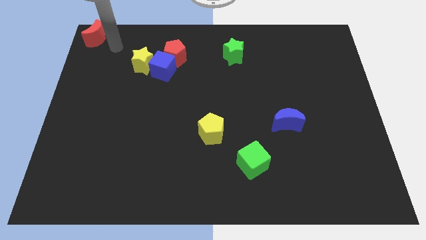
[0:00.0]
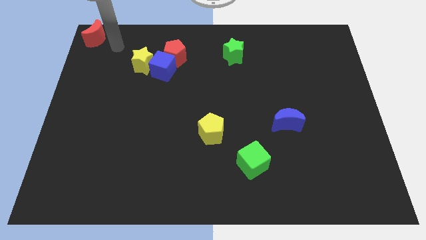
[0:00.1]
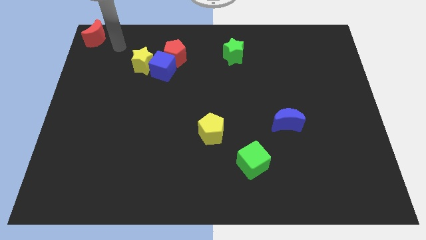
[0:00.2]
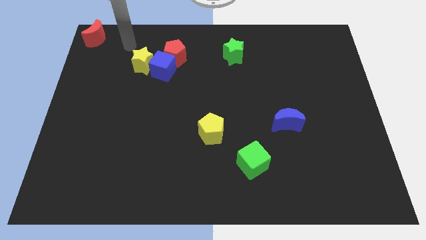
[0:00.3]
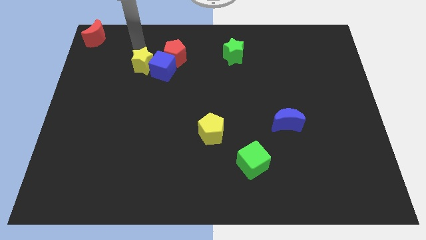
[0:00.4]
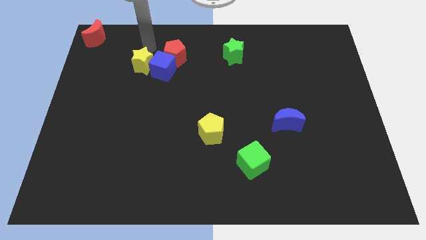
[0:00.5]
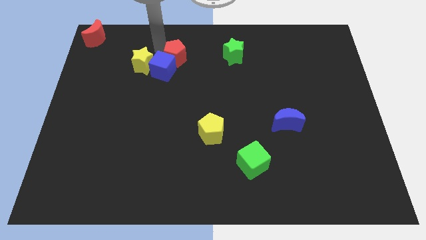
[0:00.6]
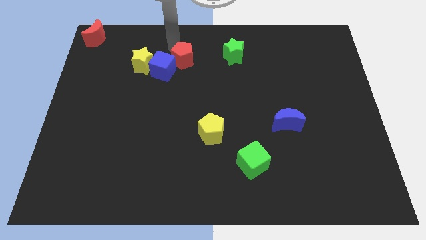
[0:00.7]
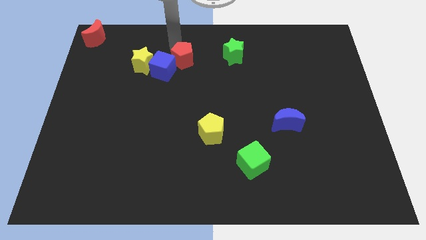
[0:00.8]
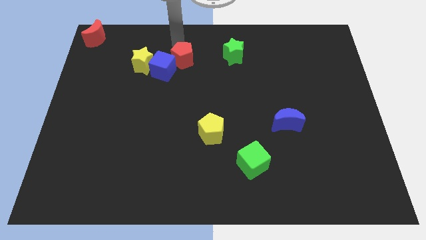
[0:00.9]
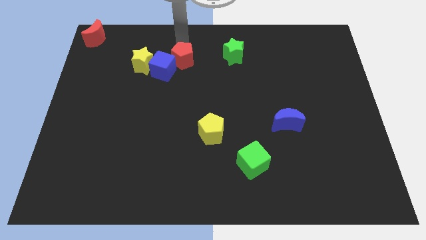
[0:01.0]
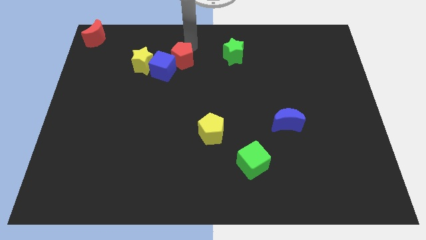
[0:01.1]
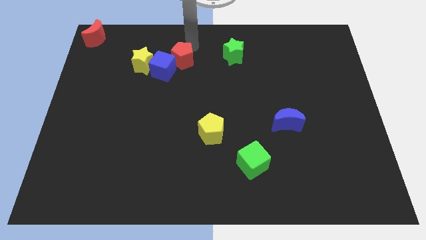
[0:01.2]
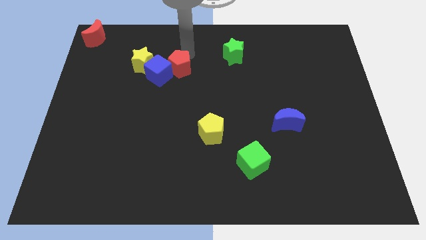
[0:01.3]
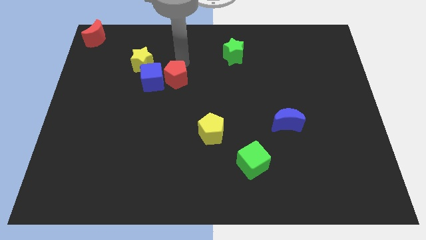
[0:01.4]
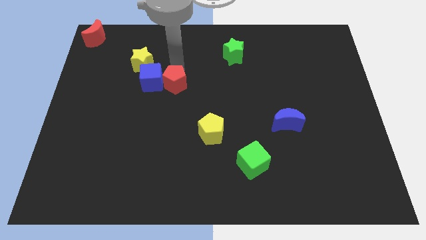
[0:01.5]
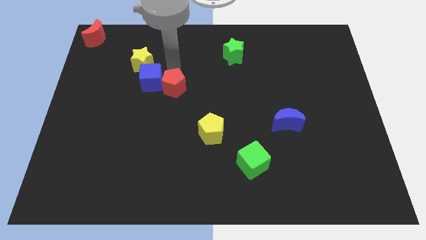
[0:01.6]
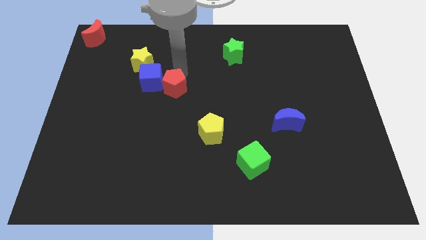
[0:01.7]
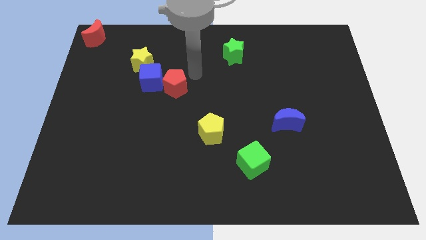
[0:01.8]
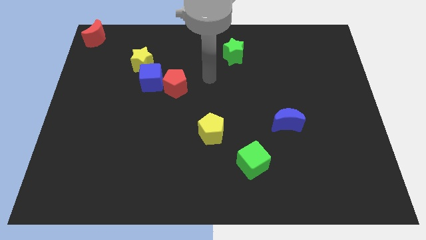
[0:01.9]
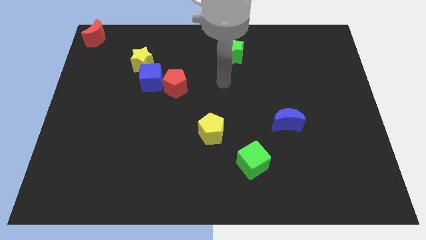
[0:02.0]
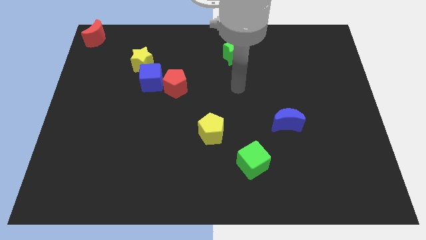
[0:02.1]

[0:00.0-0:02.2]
slightly push red pentagon downwards

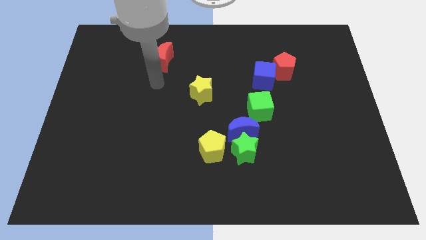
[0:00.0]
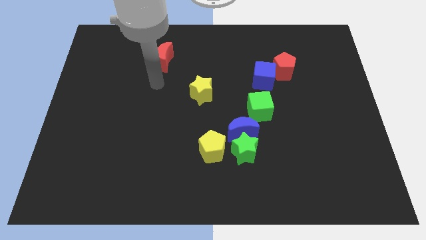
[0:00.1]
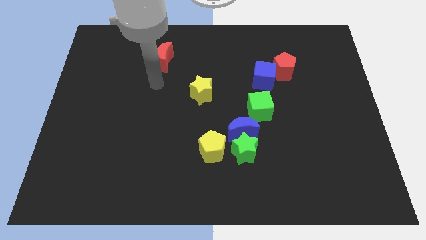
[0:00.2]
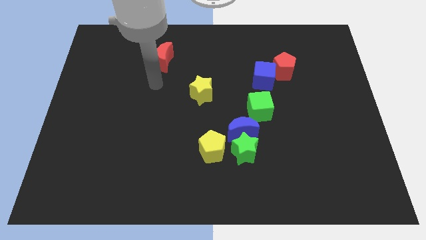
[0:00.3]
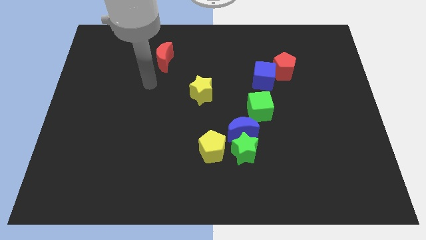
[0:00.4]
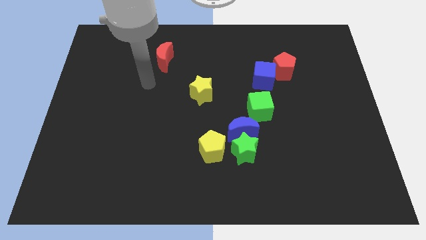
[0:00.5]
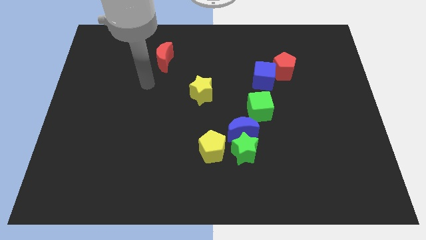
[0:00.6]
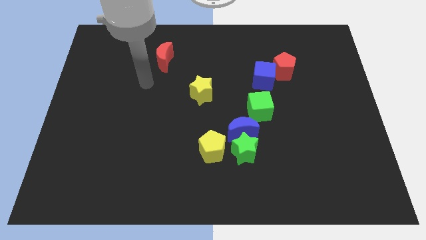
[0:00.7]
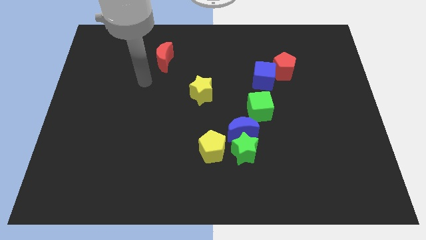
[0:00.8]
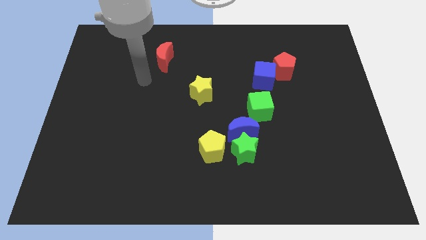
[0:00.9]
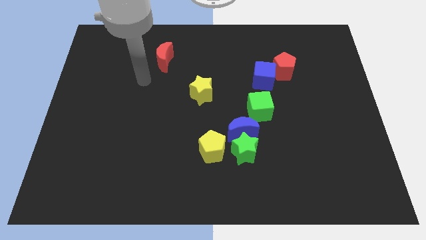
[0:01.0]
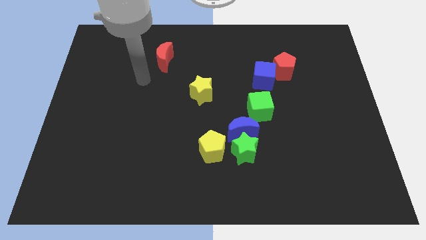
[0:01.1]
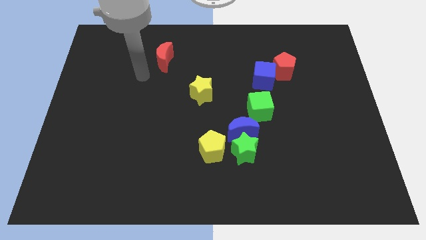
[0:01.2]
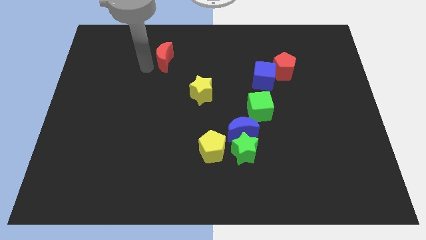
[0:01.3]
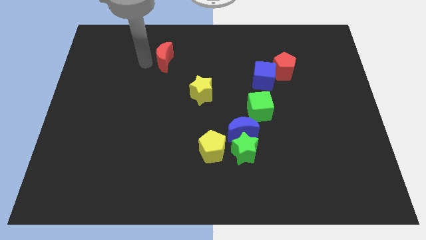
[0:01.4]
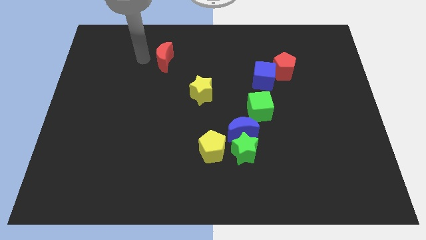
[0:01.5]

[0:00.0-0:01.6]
point your arm at the left of the red crescent

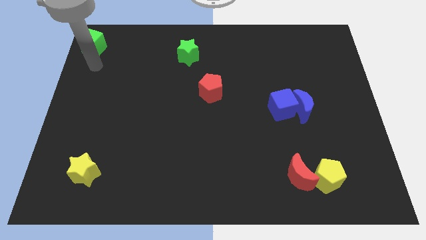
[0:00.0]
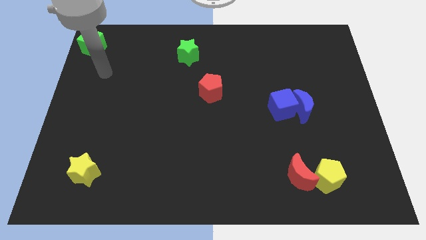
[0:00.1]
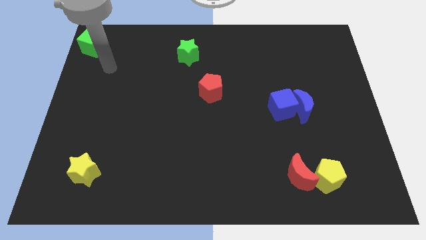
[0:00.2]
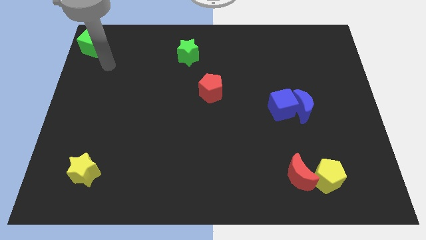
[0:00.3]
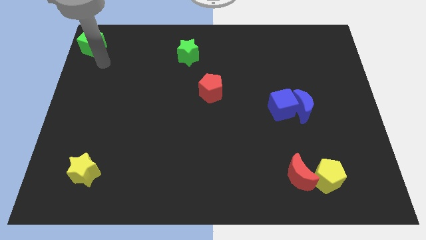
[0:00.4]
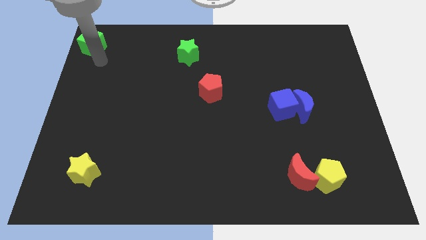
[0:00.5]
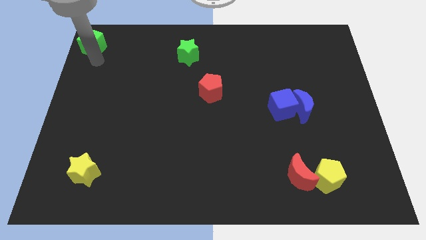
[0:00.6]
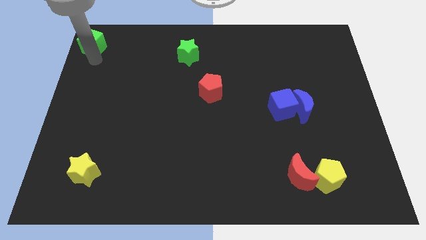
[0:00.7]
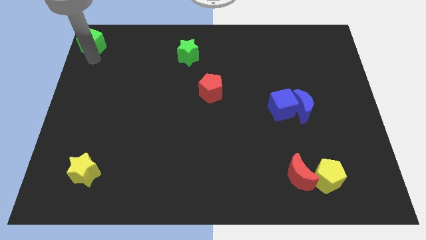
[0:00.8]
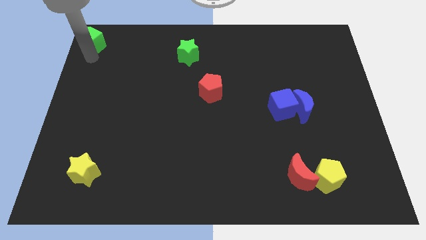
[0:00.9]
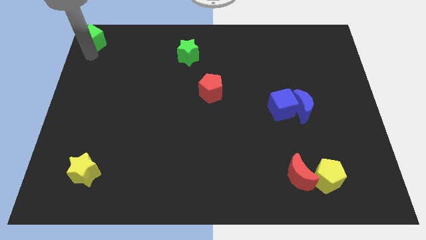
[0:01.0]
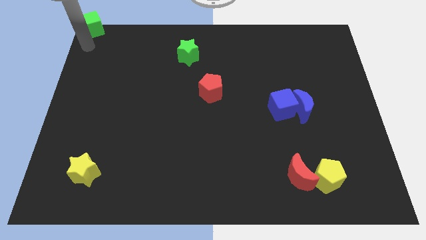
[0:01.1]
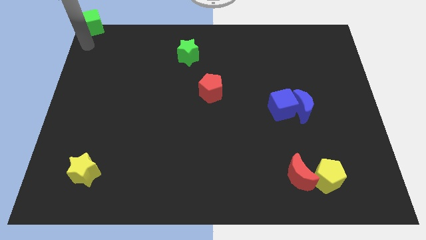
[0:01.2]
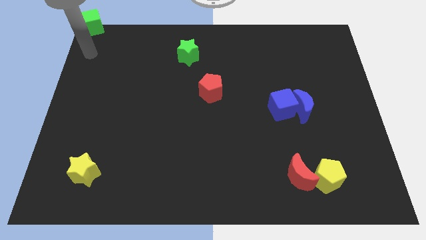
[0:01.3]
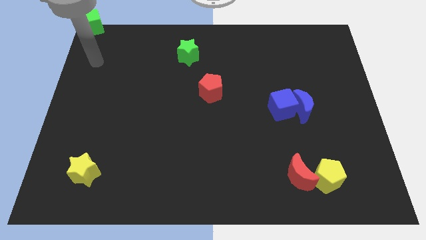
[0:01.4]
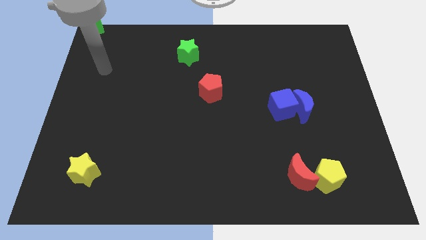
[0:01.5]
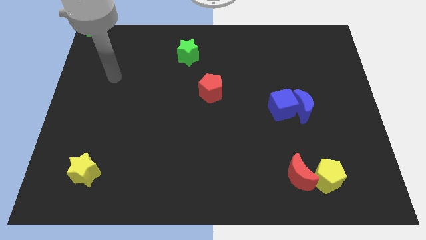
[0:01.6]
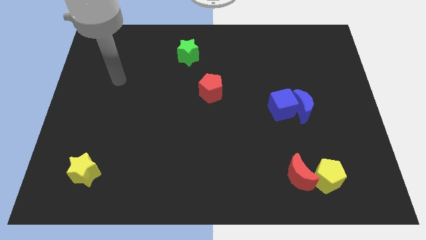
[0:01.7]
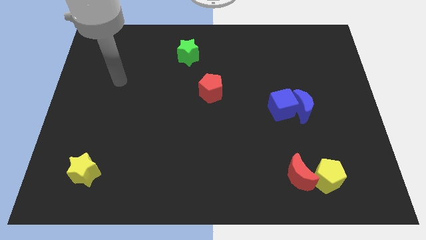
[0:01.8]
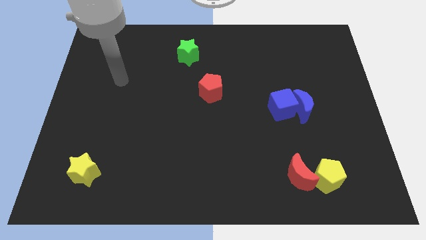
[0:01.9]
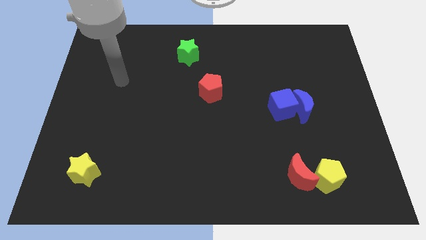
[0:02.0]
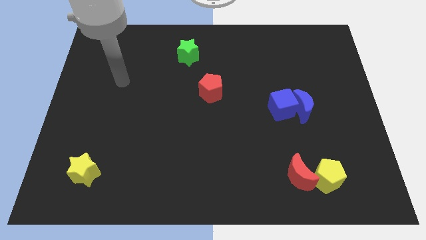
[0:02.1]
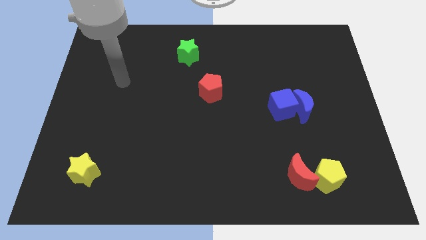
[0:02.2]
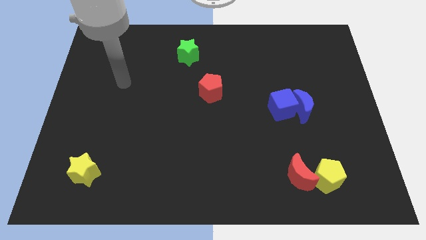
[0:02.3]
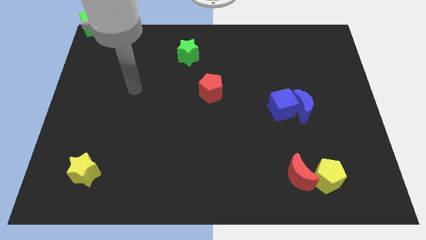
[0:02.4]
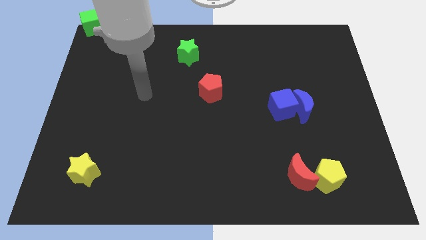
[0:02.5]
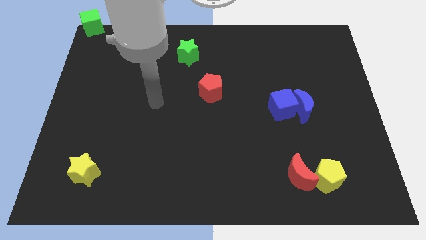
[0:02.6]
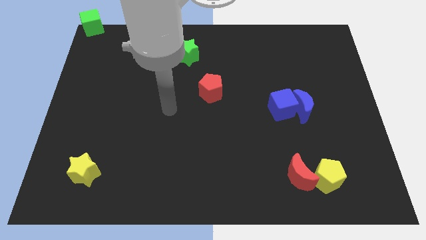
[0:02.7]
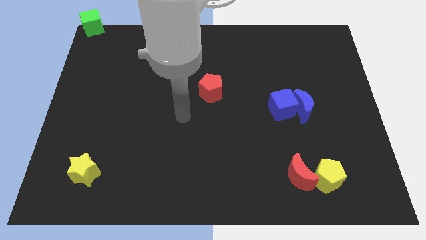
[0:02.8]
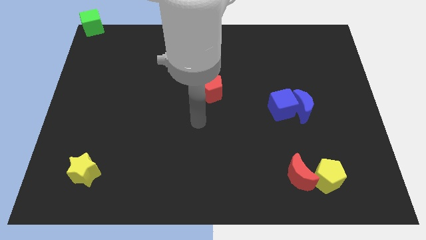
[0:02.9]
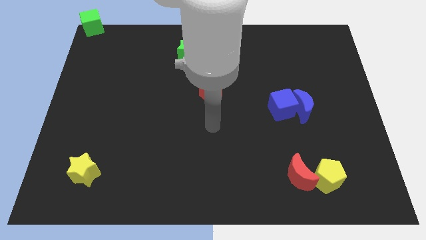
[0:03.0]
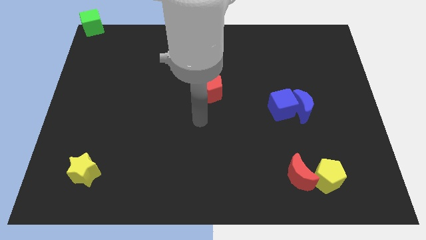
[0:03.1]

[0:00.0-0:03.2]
move your arm away from green cube

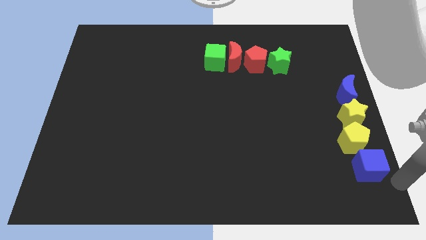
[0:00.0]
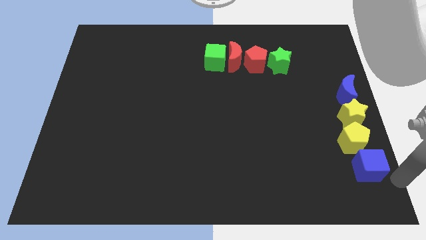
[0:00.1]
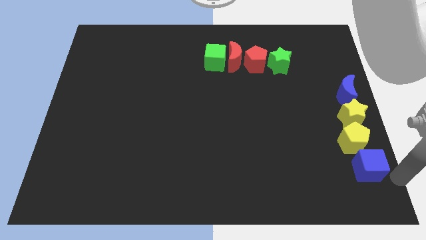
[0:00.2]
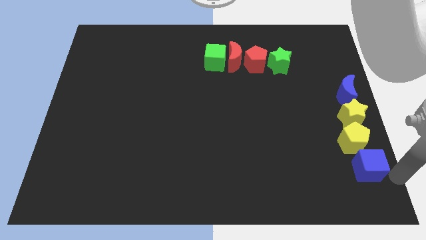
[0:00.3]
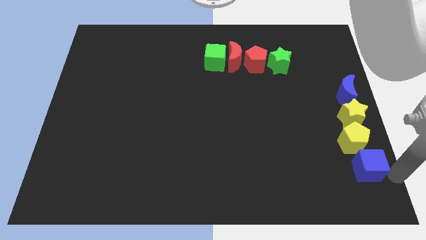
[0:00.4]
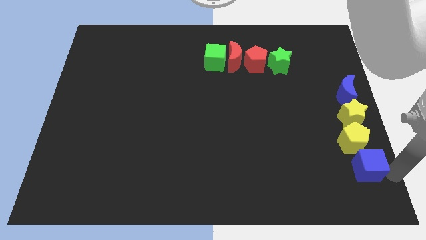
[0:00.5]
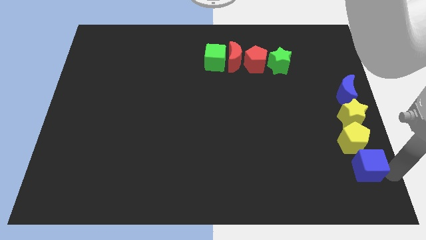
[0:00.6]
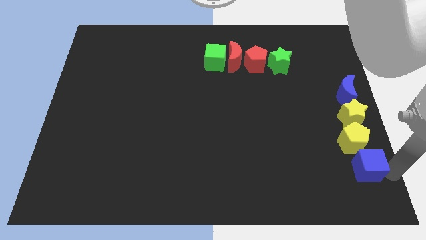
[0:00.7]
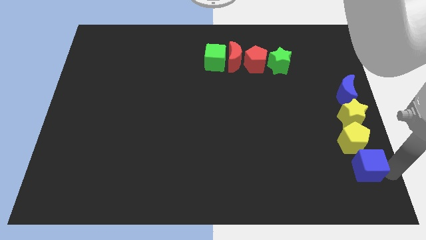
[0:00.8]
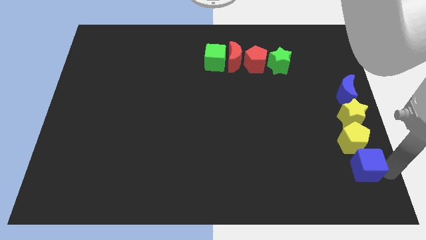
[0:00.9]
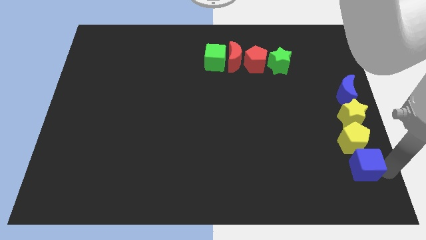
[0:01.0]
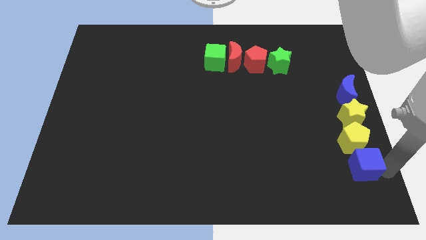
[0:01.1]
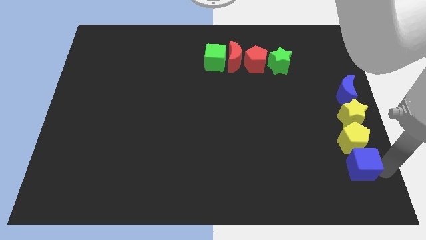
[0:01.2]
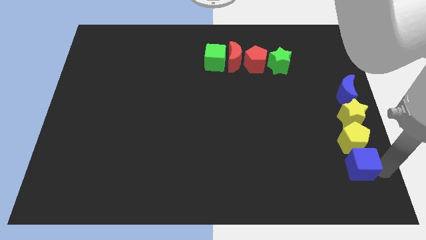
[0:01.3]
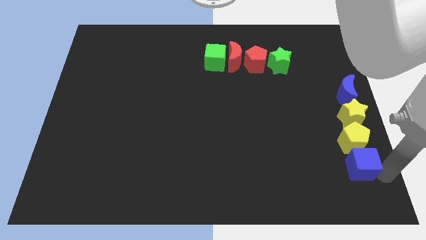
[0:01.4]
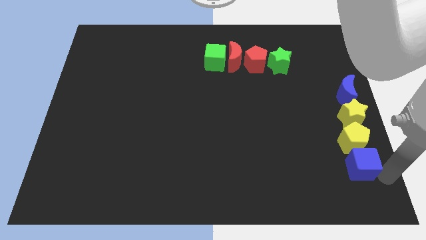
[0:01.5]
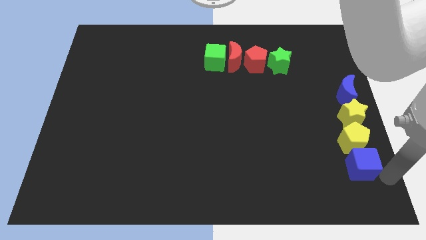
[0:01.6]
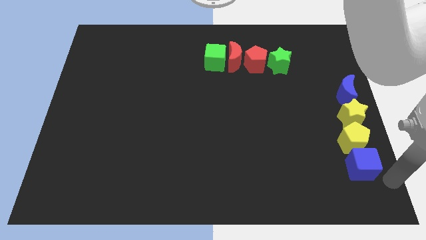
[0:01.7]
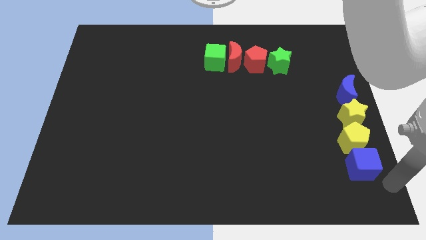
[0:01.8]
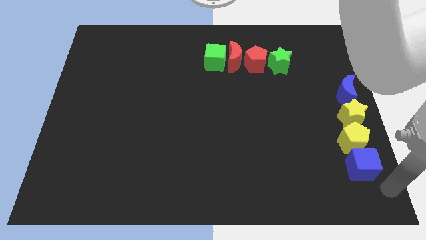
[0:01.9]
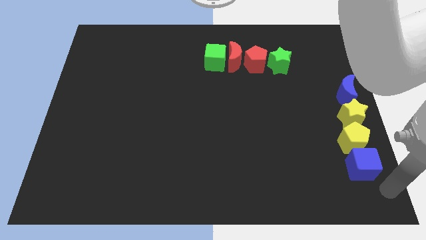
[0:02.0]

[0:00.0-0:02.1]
adjust the blue cube below the yellow pentagon
